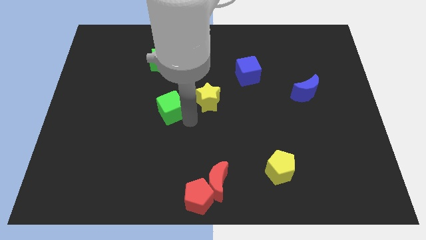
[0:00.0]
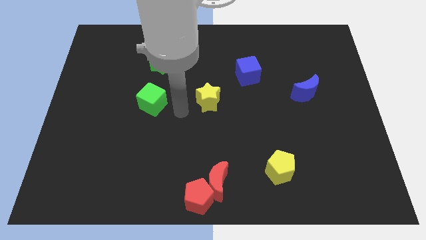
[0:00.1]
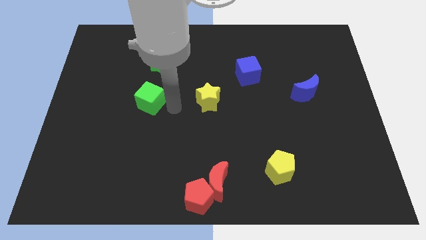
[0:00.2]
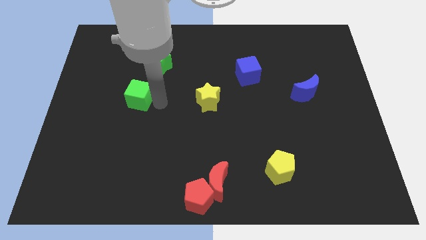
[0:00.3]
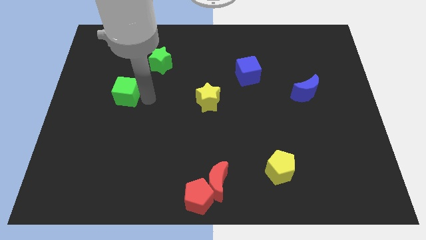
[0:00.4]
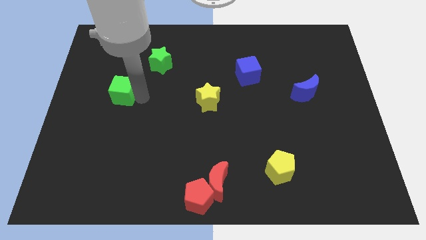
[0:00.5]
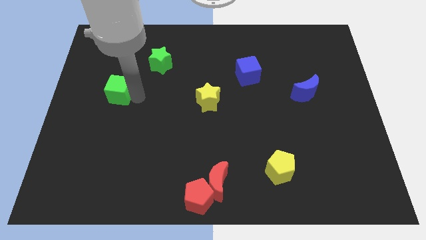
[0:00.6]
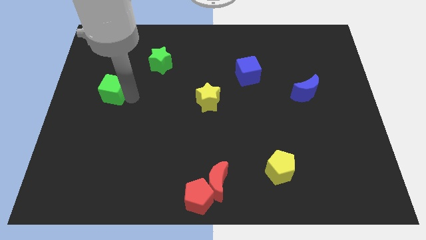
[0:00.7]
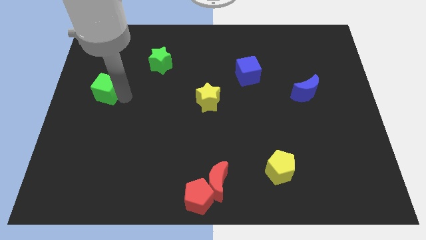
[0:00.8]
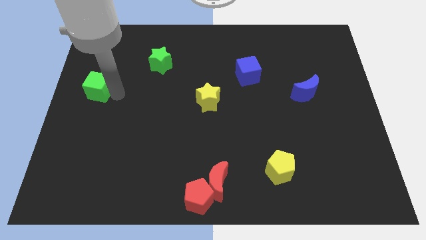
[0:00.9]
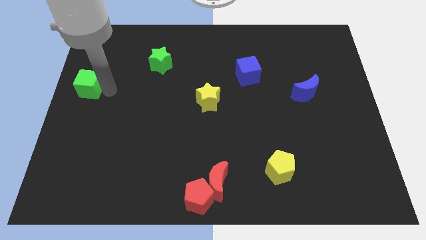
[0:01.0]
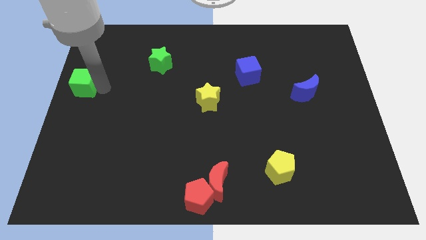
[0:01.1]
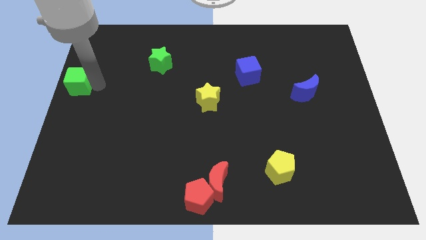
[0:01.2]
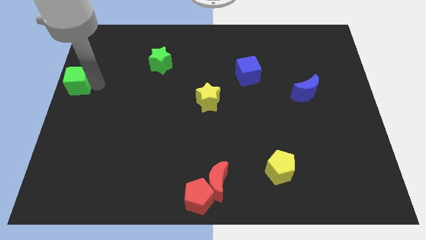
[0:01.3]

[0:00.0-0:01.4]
slide the green cube away from yellow star

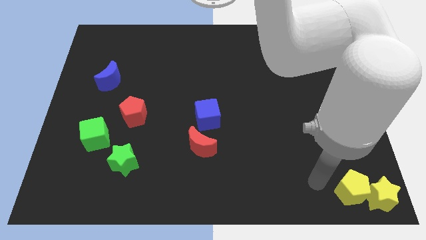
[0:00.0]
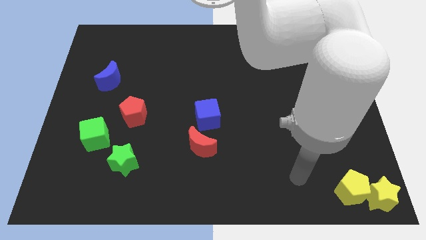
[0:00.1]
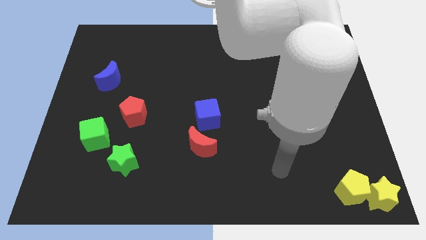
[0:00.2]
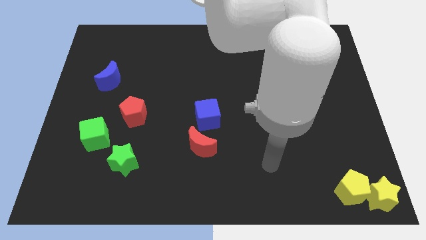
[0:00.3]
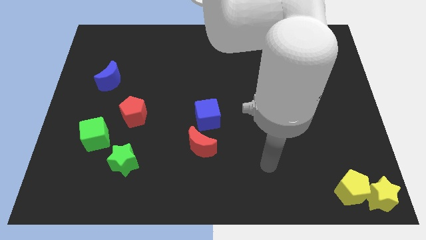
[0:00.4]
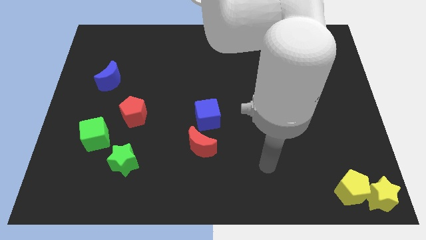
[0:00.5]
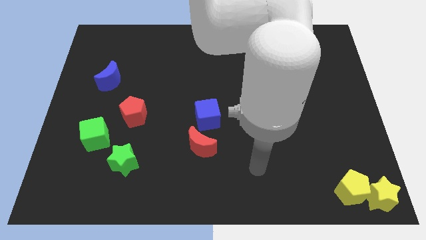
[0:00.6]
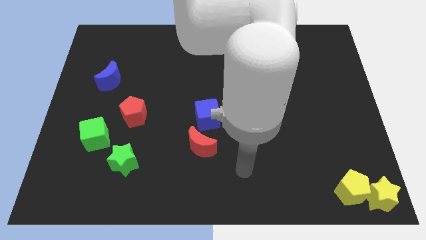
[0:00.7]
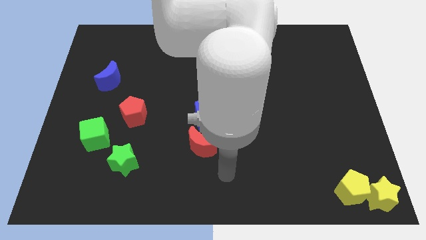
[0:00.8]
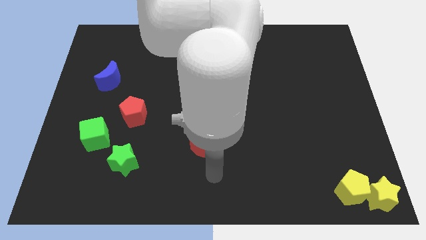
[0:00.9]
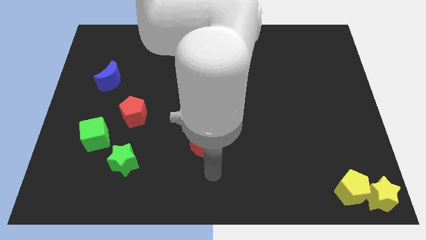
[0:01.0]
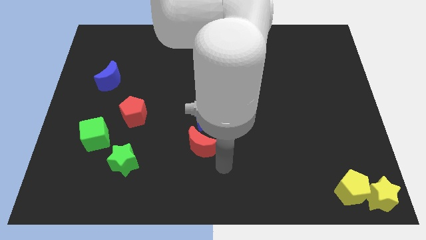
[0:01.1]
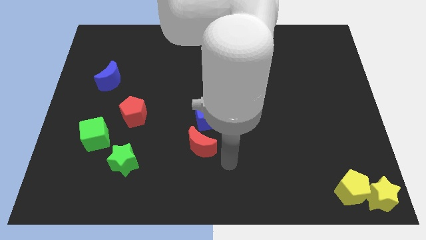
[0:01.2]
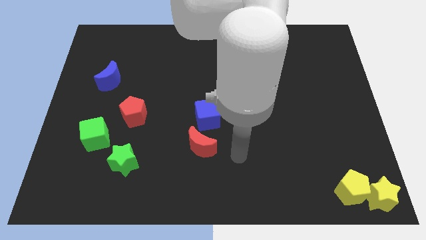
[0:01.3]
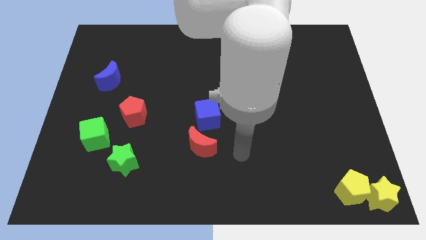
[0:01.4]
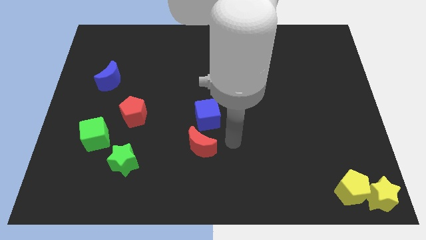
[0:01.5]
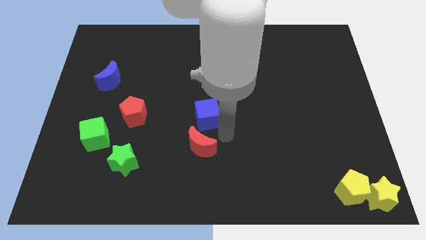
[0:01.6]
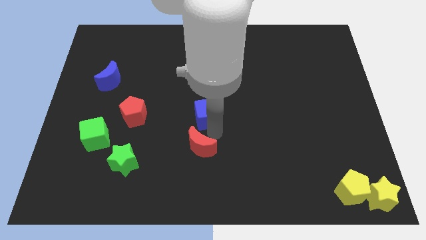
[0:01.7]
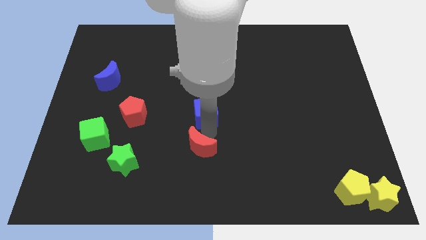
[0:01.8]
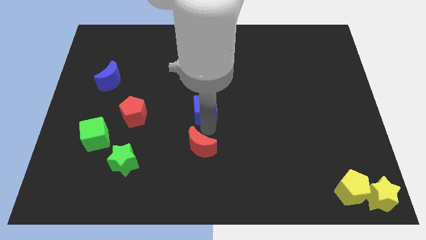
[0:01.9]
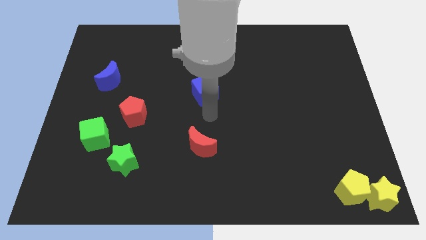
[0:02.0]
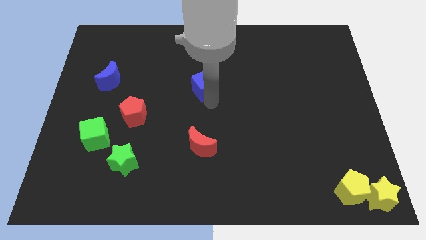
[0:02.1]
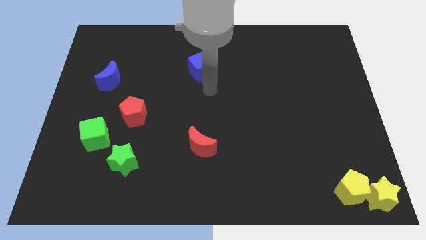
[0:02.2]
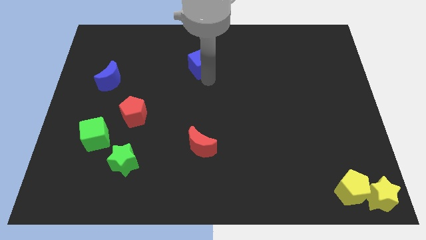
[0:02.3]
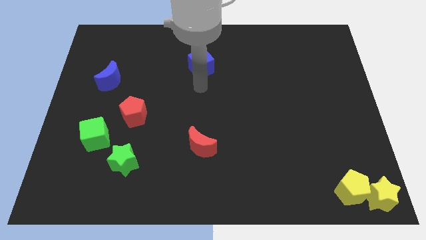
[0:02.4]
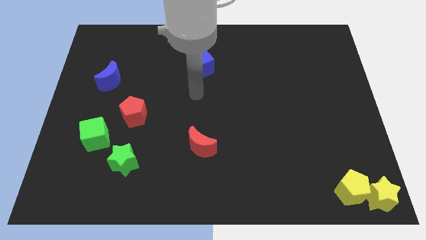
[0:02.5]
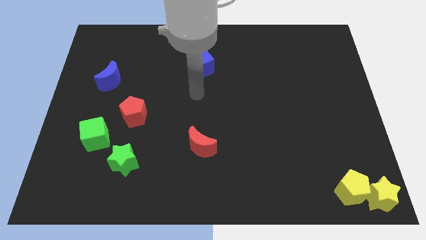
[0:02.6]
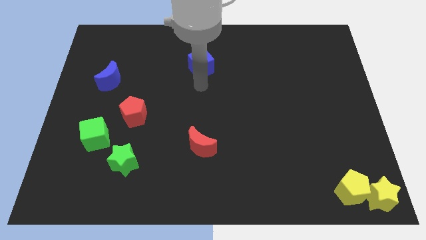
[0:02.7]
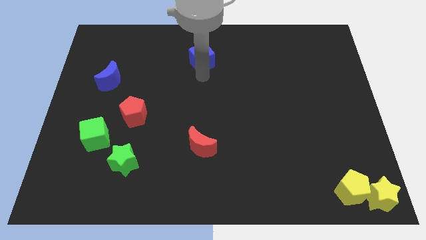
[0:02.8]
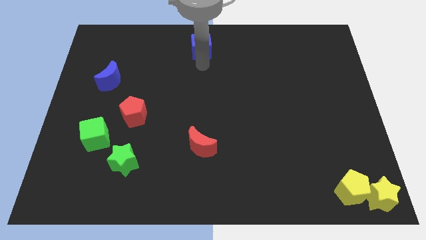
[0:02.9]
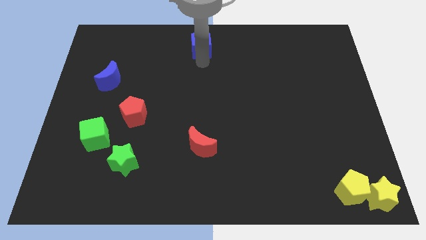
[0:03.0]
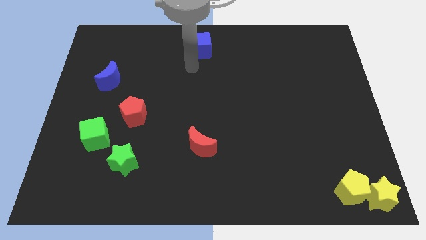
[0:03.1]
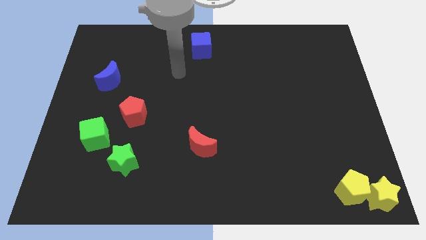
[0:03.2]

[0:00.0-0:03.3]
separate the blue cube to the top side

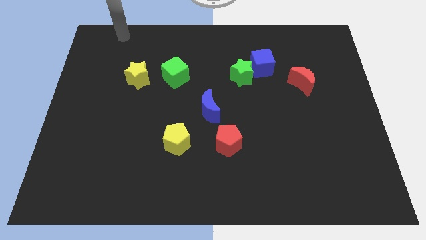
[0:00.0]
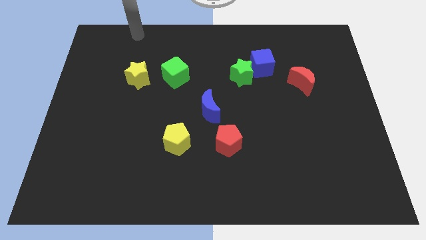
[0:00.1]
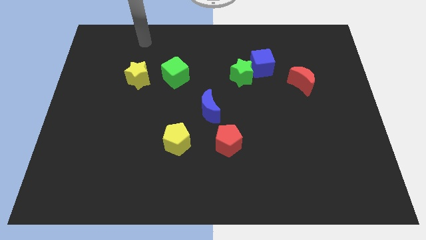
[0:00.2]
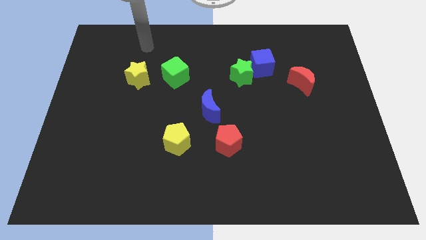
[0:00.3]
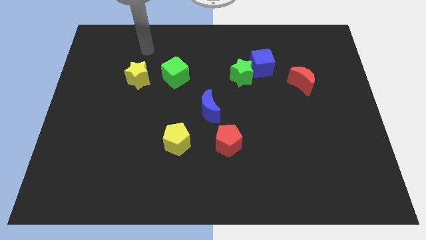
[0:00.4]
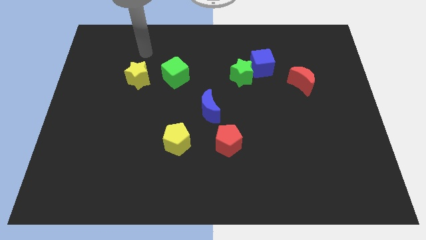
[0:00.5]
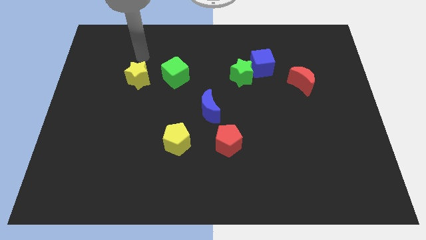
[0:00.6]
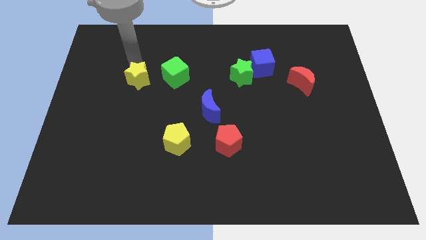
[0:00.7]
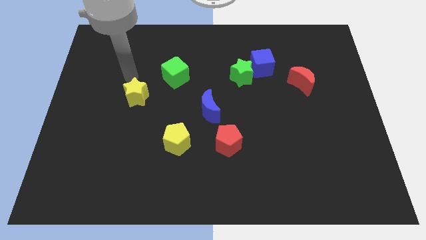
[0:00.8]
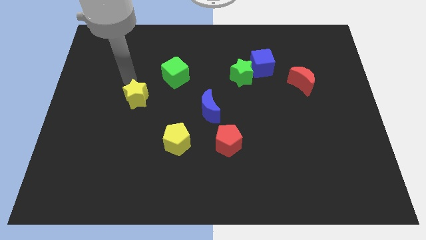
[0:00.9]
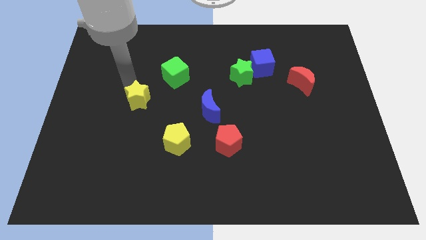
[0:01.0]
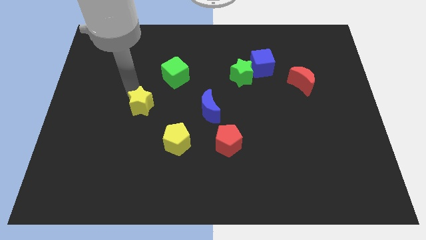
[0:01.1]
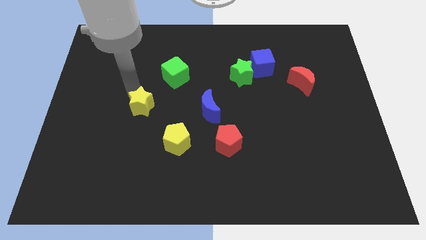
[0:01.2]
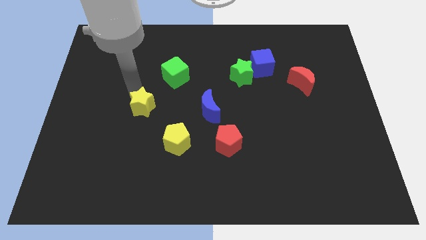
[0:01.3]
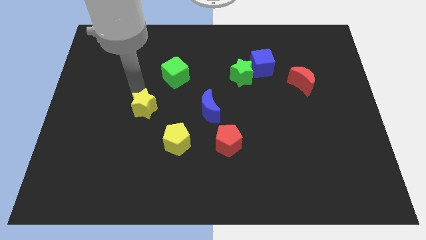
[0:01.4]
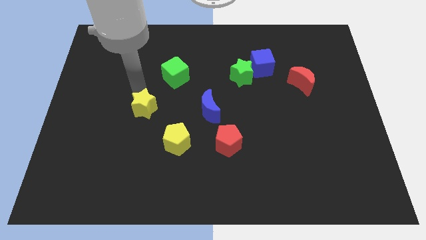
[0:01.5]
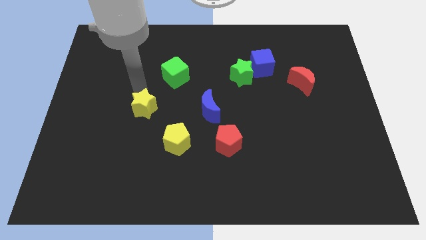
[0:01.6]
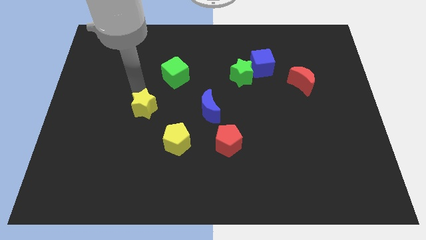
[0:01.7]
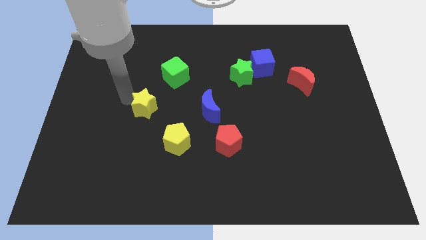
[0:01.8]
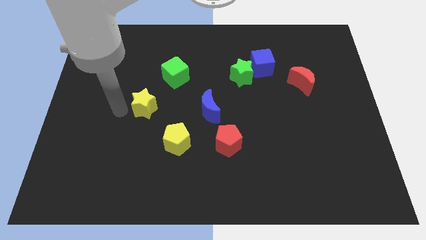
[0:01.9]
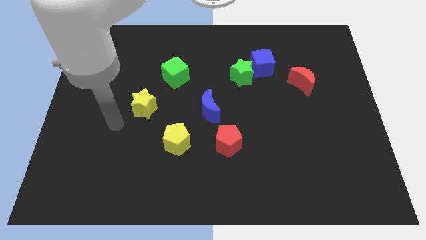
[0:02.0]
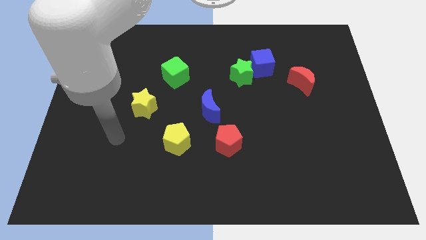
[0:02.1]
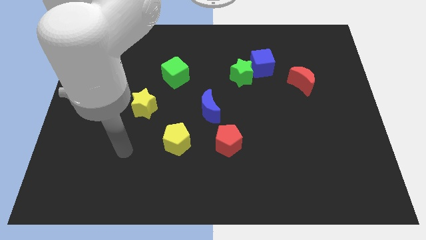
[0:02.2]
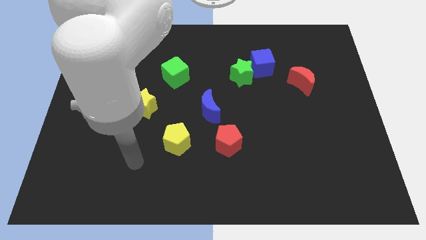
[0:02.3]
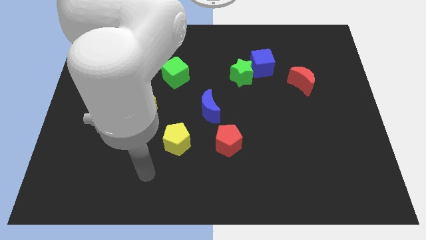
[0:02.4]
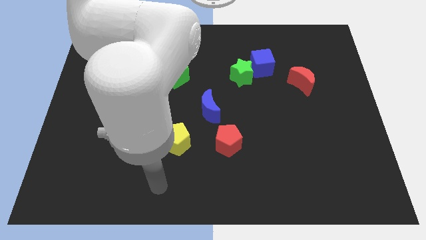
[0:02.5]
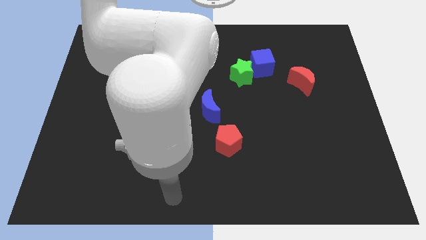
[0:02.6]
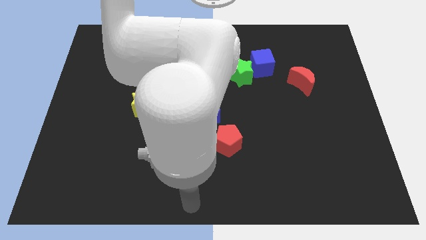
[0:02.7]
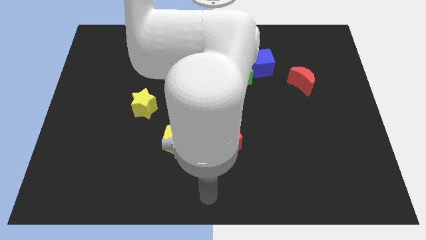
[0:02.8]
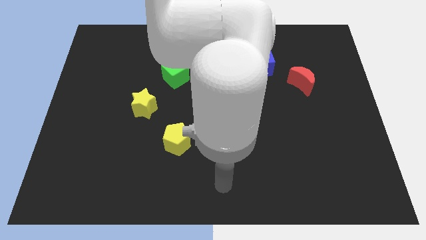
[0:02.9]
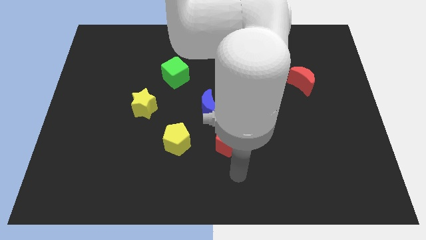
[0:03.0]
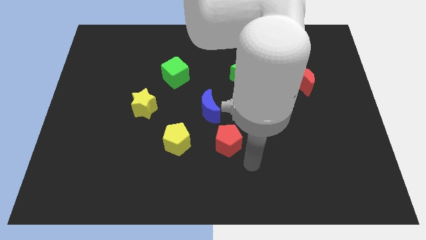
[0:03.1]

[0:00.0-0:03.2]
move the yellow star close to the yellow pentagon

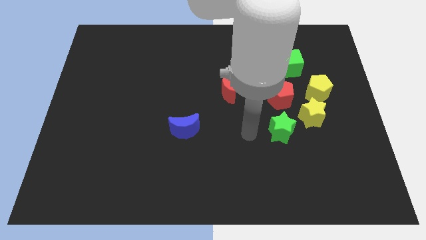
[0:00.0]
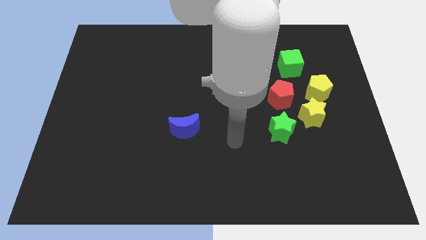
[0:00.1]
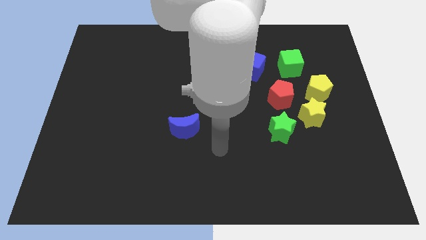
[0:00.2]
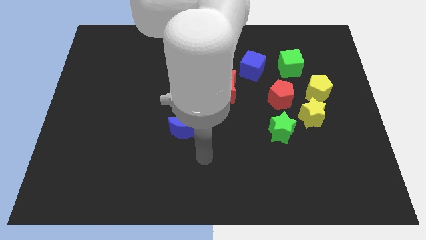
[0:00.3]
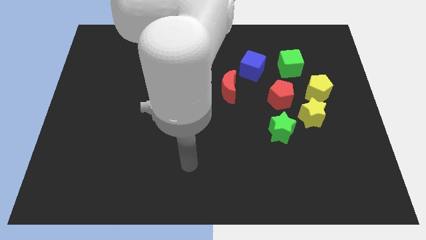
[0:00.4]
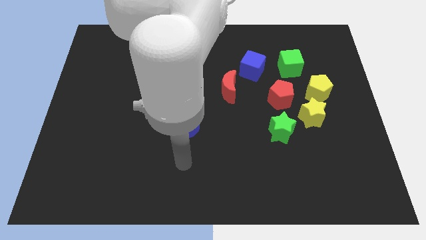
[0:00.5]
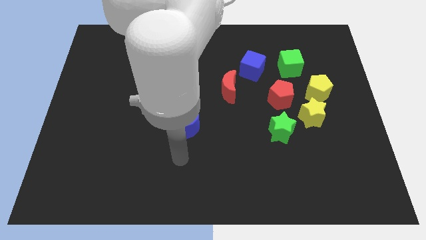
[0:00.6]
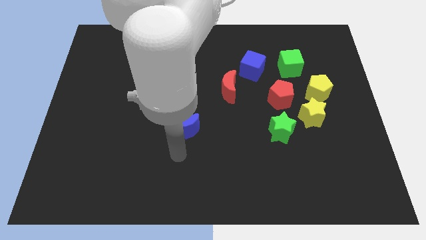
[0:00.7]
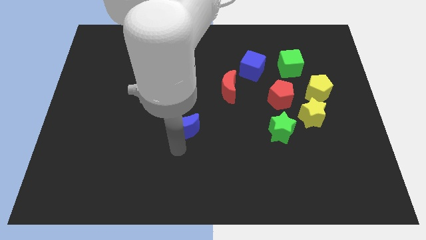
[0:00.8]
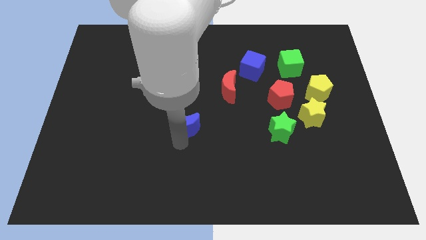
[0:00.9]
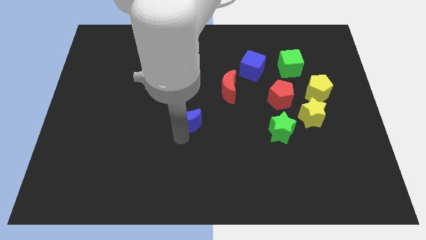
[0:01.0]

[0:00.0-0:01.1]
tap the blue crescent

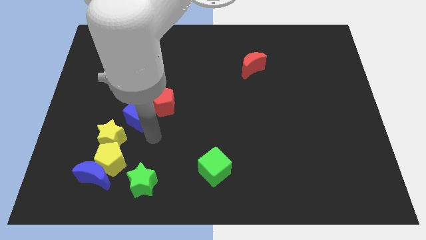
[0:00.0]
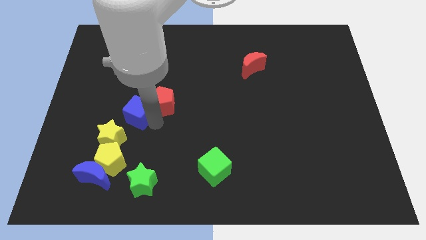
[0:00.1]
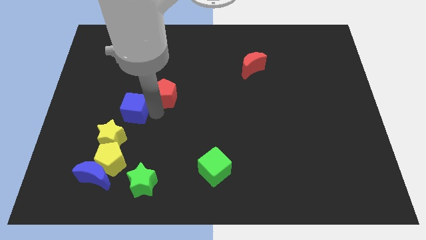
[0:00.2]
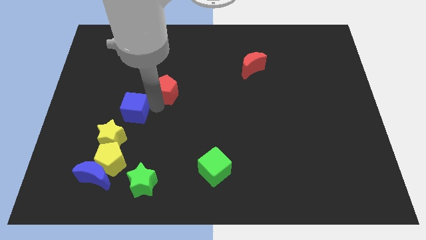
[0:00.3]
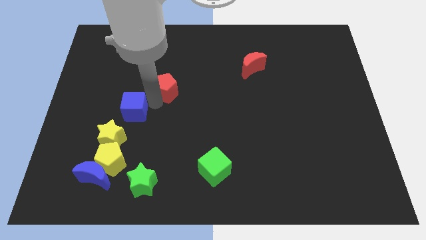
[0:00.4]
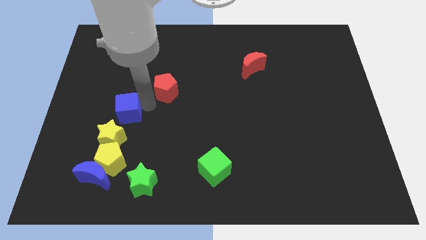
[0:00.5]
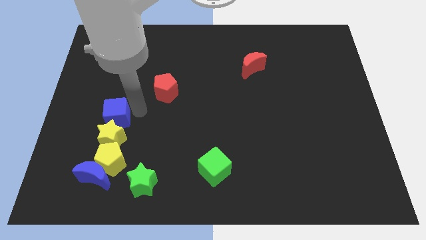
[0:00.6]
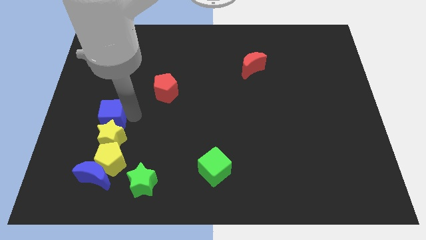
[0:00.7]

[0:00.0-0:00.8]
go and separate the blue cube and the red pentagon
